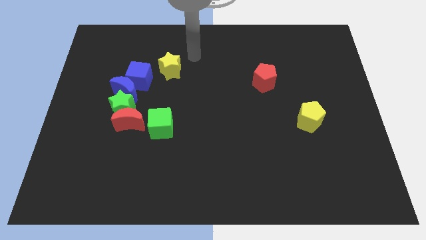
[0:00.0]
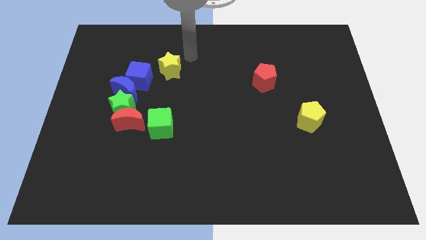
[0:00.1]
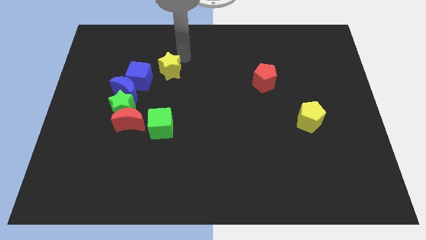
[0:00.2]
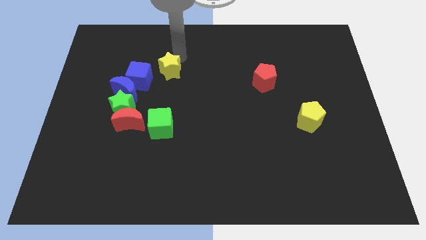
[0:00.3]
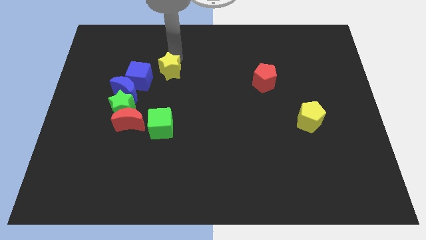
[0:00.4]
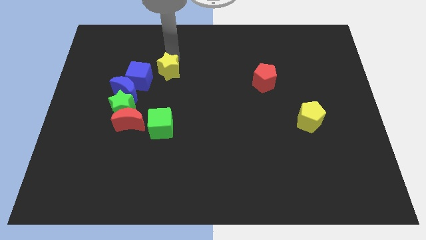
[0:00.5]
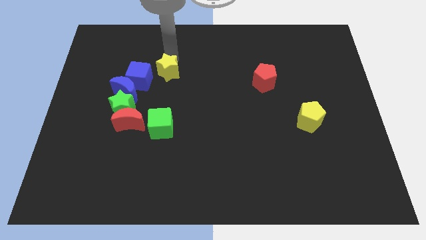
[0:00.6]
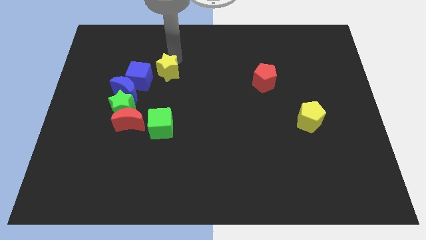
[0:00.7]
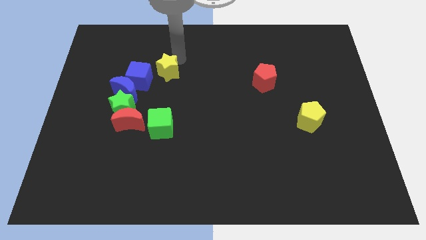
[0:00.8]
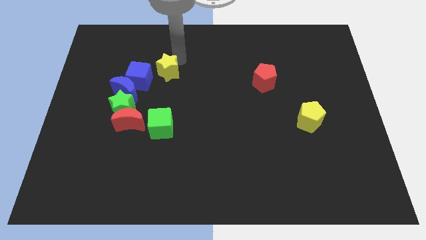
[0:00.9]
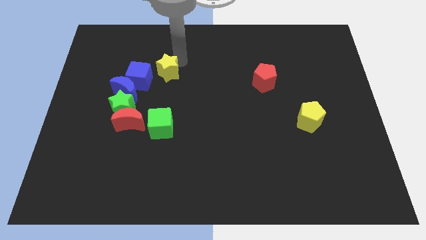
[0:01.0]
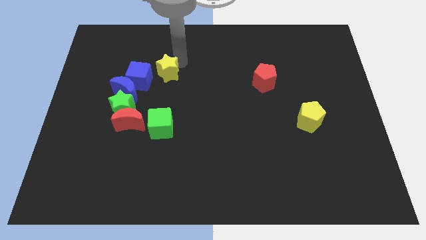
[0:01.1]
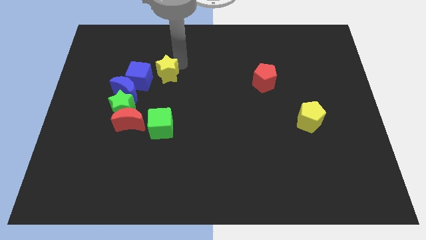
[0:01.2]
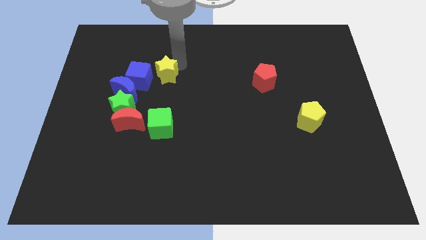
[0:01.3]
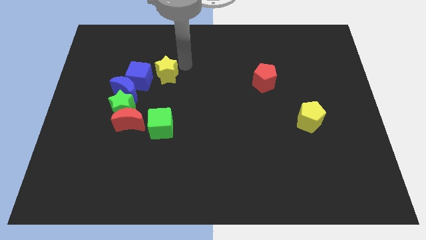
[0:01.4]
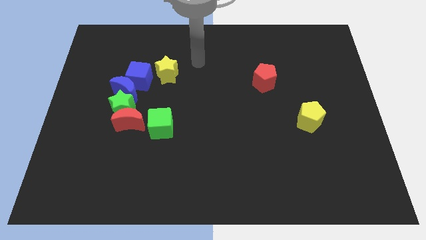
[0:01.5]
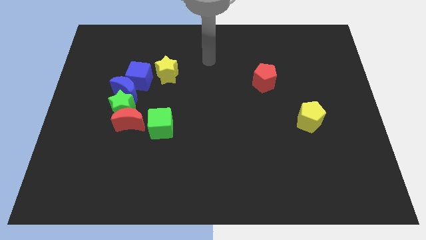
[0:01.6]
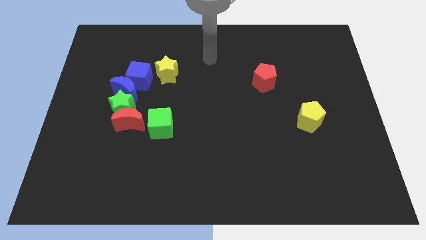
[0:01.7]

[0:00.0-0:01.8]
push the yellow star down slightly

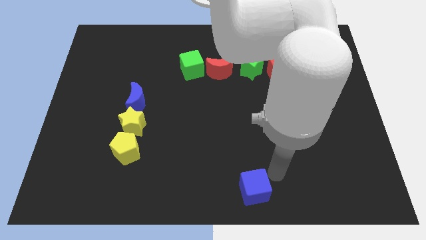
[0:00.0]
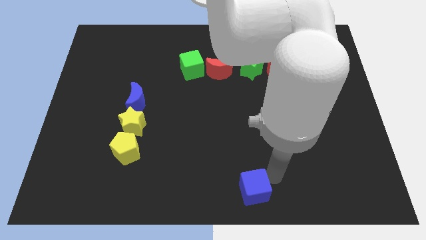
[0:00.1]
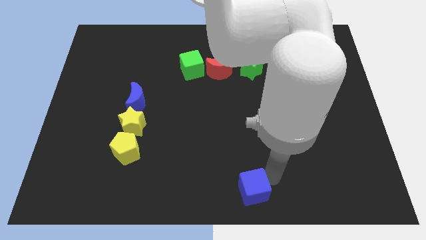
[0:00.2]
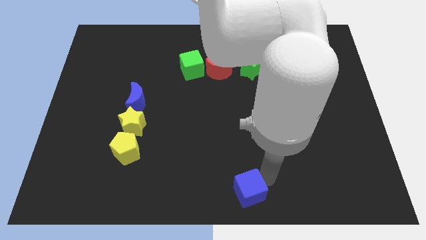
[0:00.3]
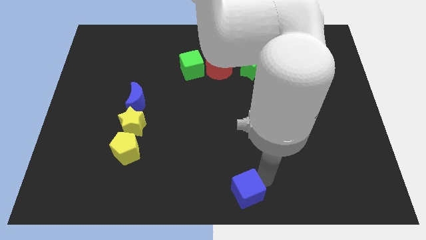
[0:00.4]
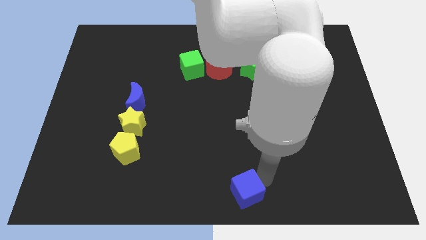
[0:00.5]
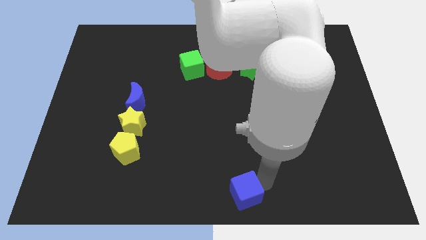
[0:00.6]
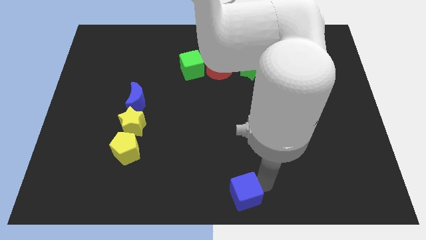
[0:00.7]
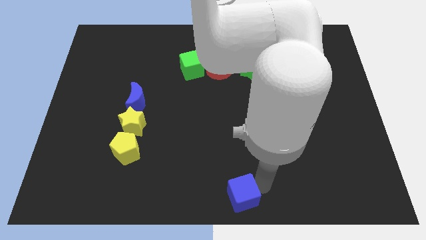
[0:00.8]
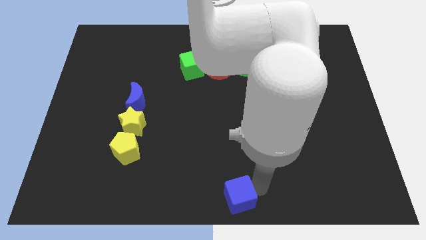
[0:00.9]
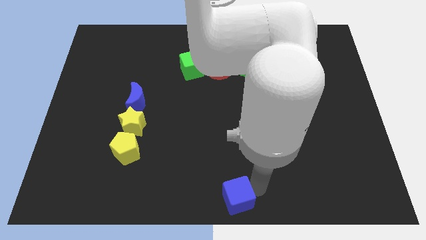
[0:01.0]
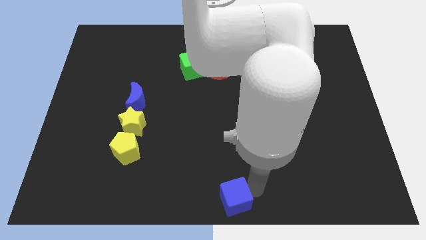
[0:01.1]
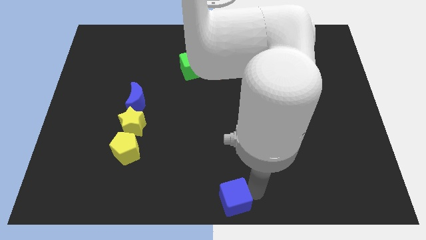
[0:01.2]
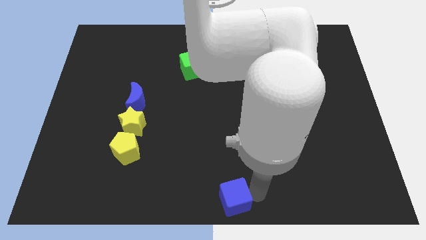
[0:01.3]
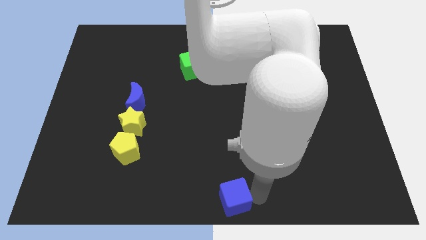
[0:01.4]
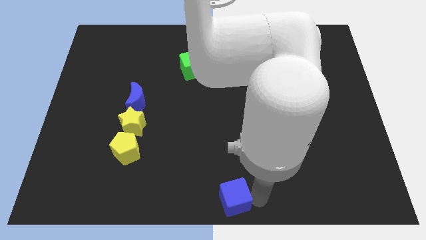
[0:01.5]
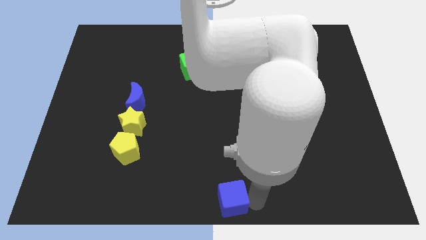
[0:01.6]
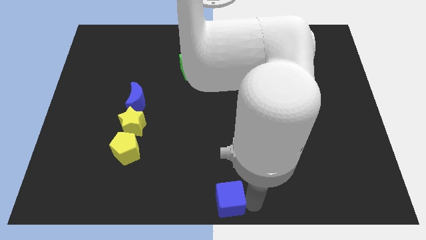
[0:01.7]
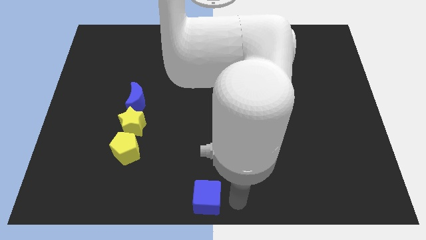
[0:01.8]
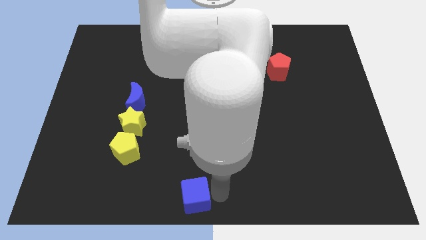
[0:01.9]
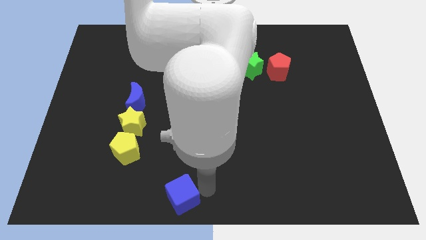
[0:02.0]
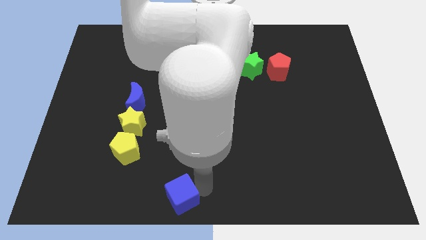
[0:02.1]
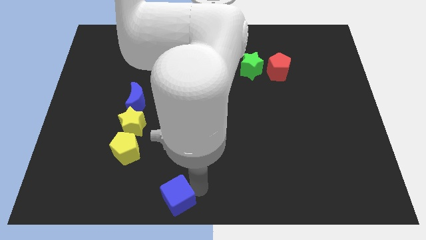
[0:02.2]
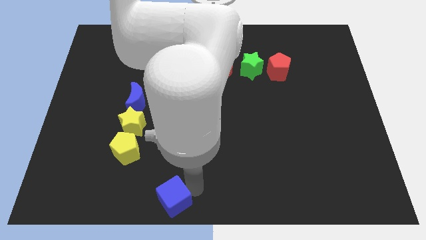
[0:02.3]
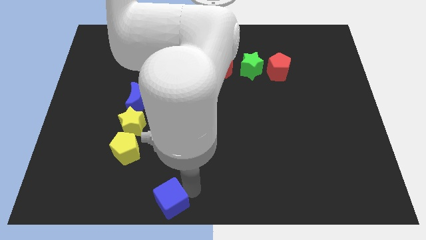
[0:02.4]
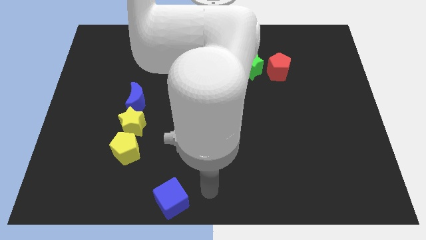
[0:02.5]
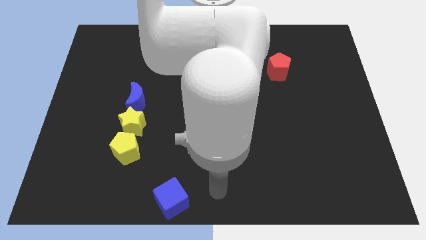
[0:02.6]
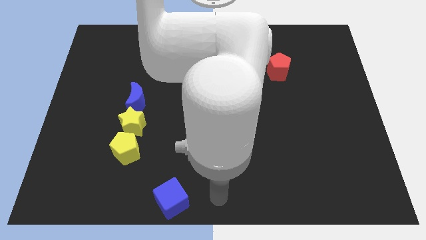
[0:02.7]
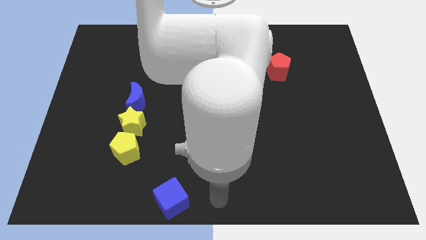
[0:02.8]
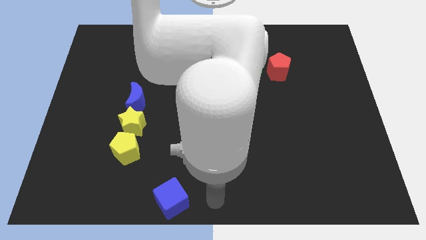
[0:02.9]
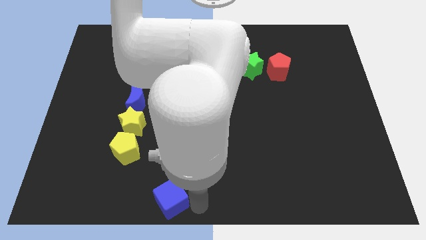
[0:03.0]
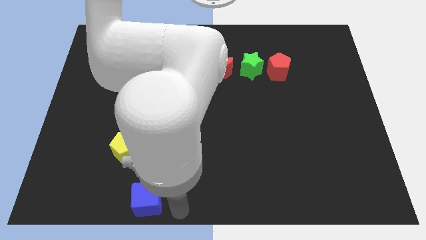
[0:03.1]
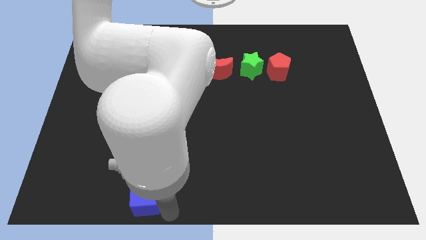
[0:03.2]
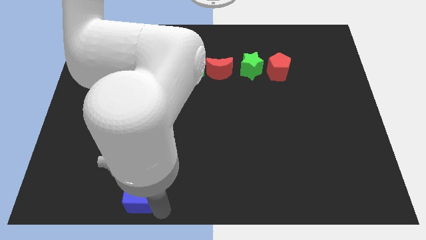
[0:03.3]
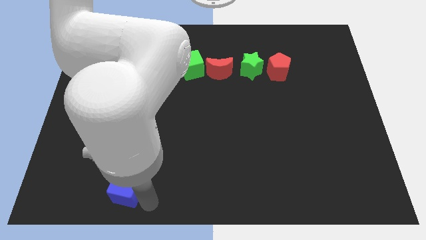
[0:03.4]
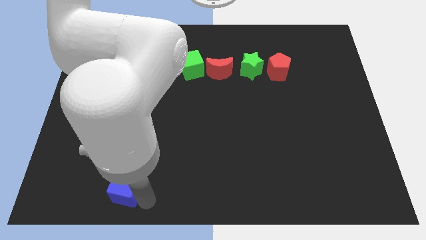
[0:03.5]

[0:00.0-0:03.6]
place the blue cube to the bottom side of the yellow pentagon

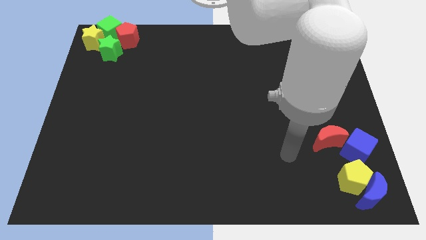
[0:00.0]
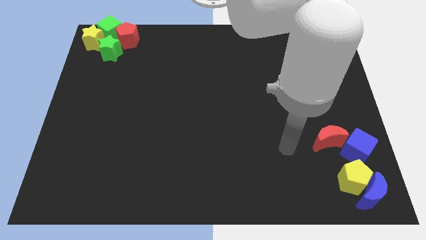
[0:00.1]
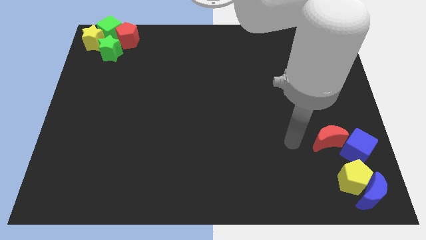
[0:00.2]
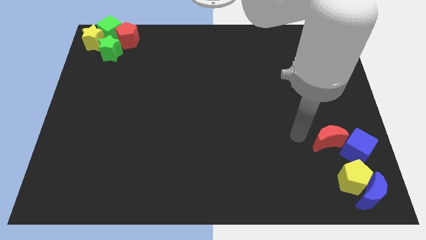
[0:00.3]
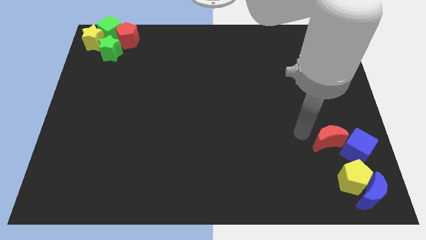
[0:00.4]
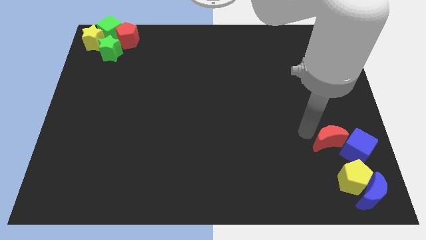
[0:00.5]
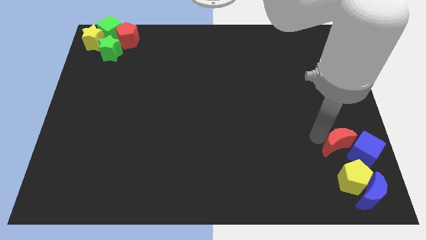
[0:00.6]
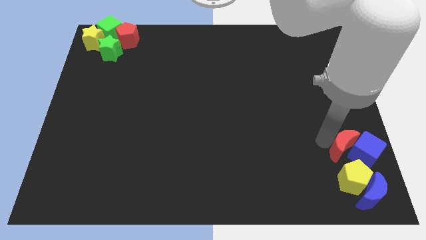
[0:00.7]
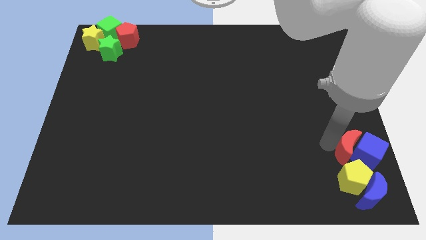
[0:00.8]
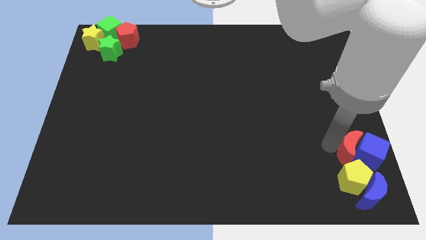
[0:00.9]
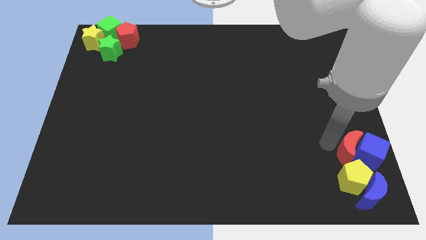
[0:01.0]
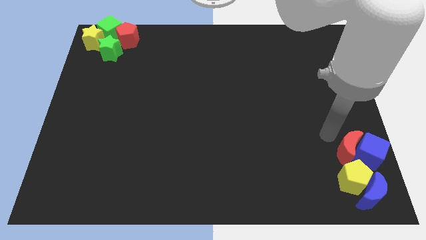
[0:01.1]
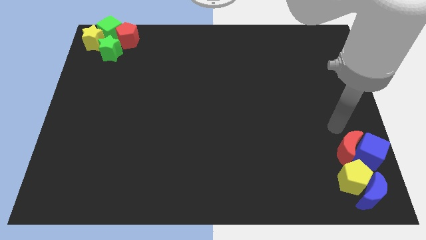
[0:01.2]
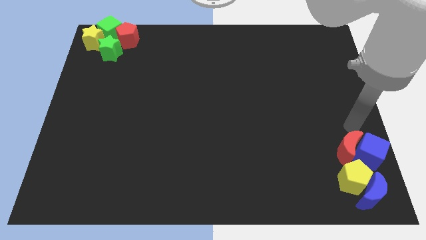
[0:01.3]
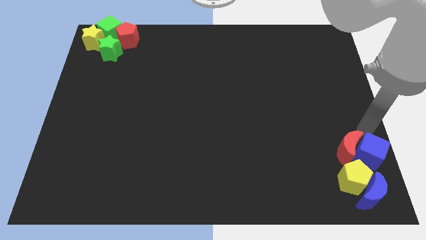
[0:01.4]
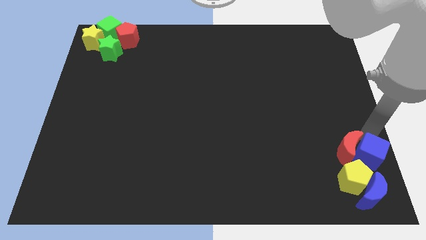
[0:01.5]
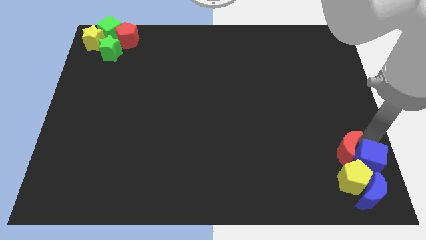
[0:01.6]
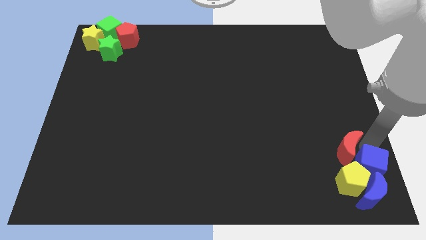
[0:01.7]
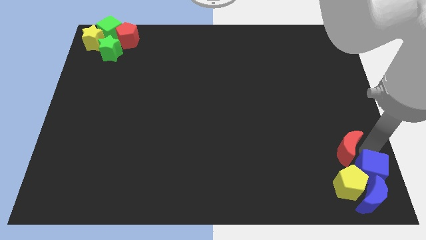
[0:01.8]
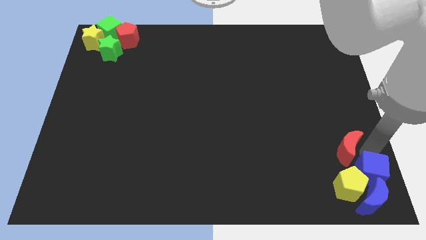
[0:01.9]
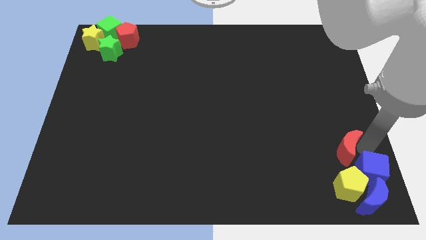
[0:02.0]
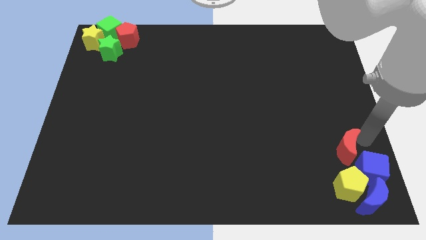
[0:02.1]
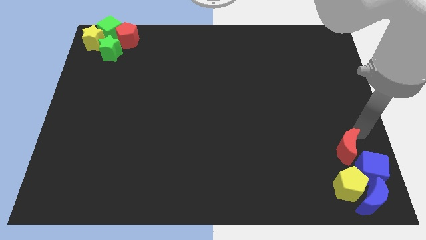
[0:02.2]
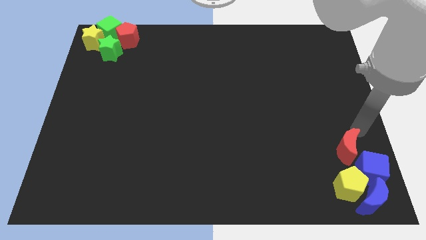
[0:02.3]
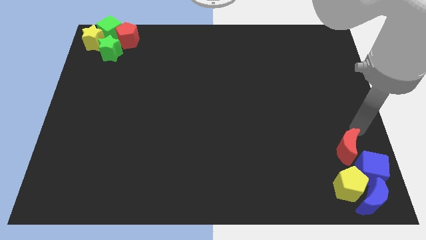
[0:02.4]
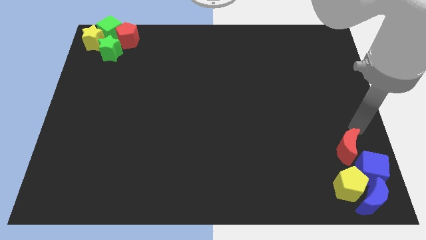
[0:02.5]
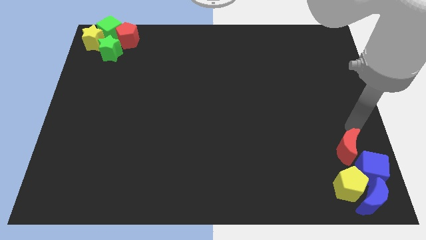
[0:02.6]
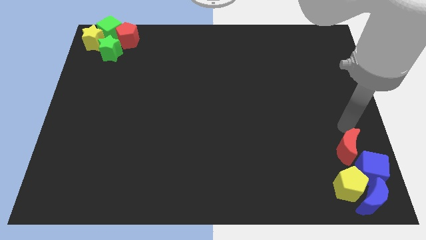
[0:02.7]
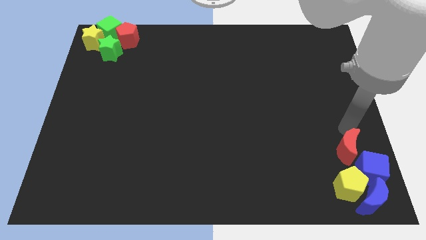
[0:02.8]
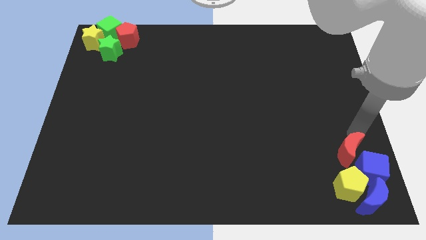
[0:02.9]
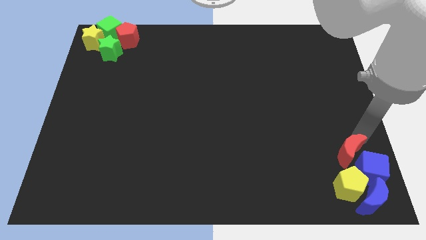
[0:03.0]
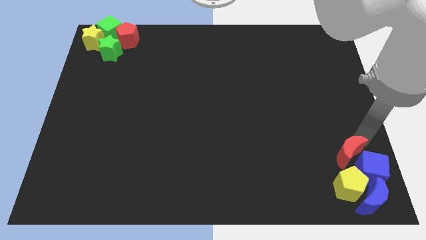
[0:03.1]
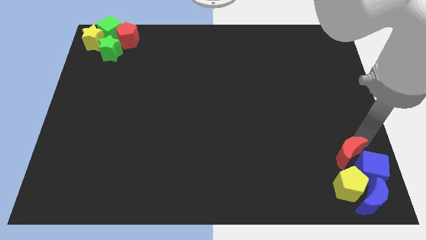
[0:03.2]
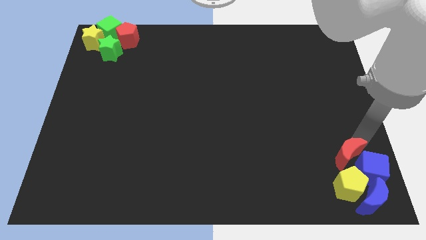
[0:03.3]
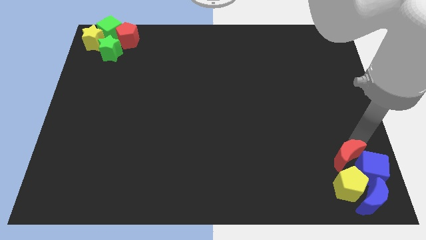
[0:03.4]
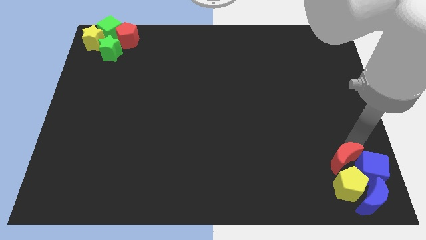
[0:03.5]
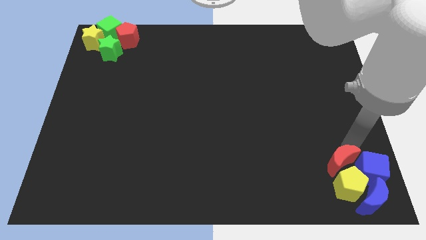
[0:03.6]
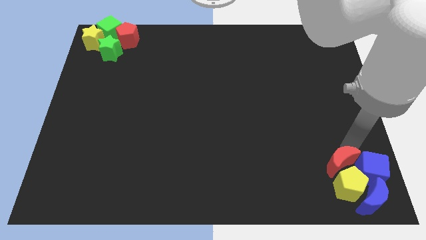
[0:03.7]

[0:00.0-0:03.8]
push the blue cube and red moon into the yellow pentagon and blue moon
